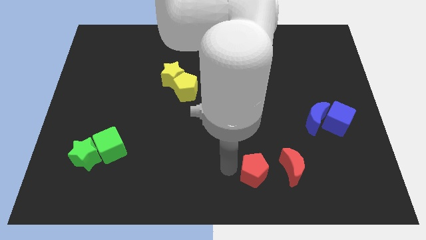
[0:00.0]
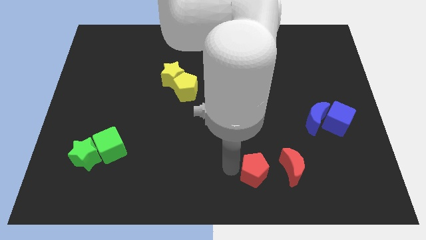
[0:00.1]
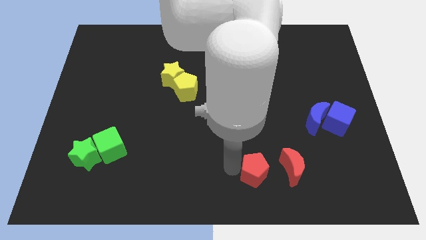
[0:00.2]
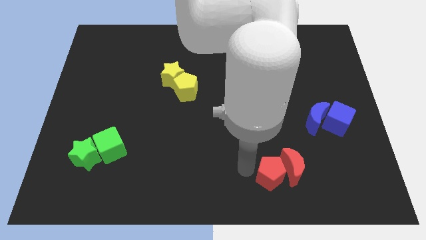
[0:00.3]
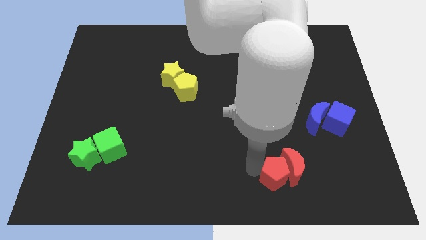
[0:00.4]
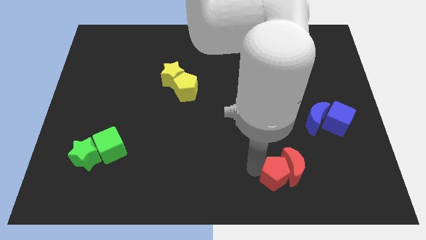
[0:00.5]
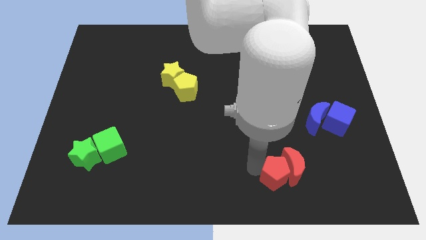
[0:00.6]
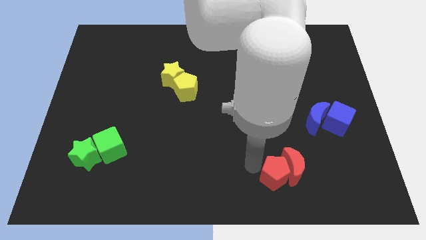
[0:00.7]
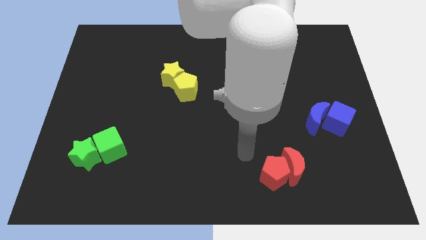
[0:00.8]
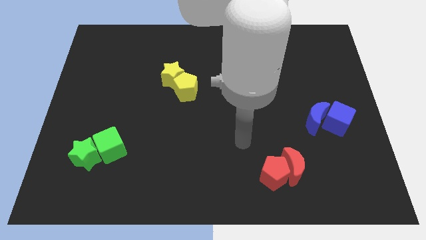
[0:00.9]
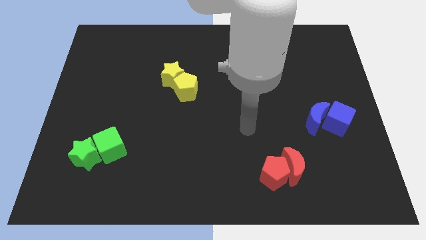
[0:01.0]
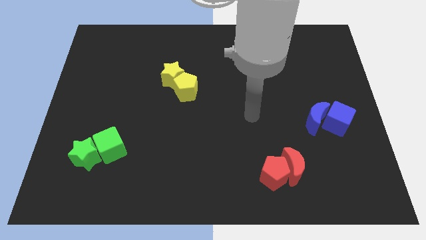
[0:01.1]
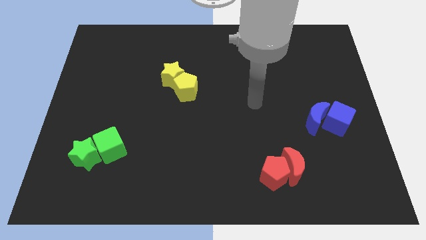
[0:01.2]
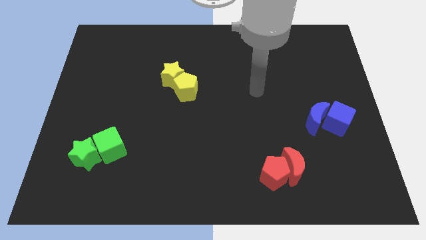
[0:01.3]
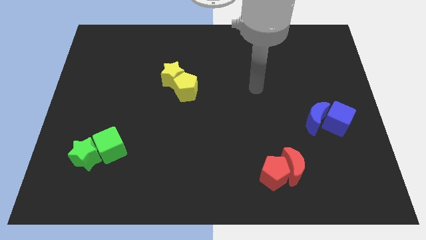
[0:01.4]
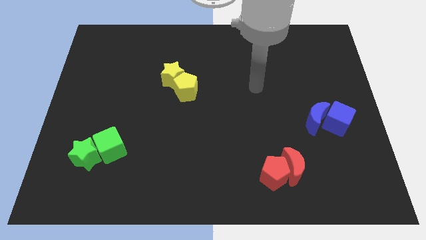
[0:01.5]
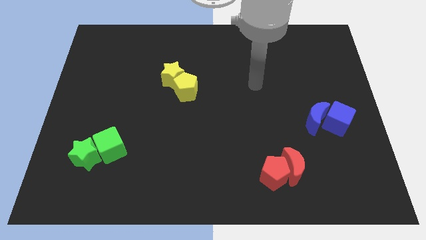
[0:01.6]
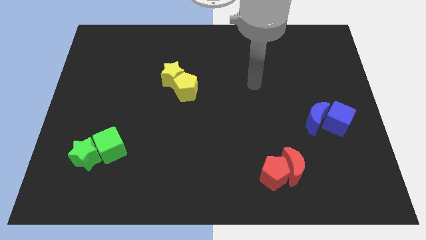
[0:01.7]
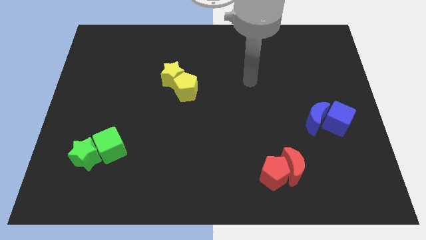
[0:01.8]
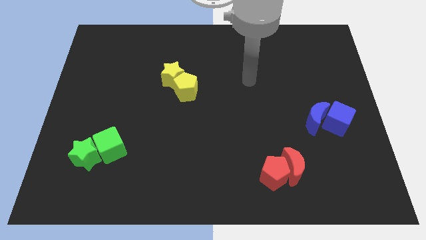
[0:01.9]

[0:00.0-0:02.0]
move the red pentagon into the red crescent

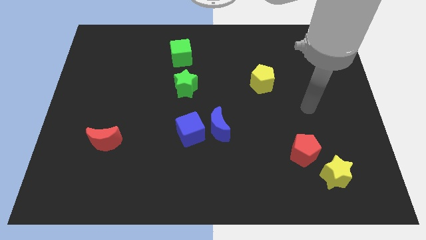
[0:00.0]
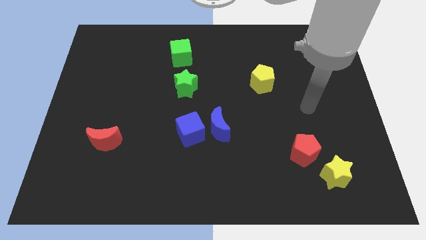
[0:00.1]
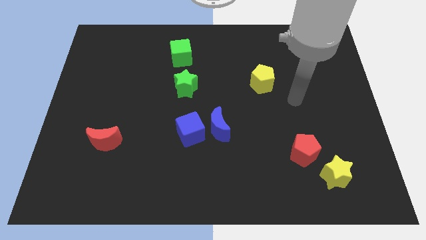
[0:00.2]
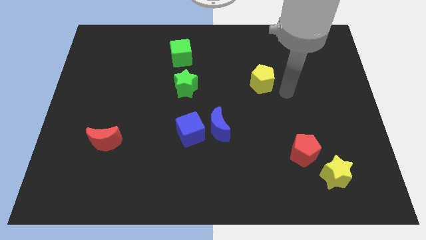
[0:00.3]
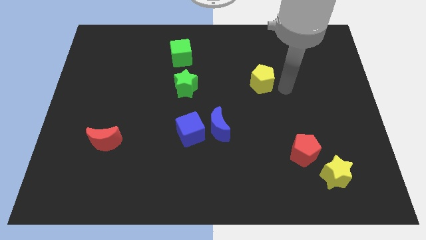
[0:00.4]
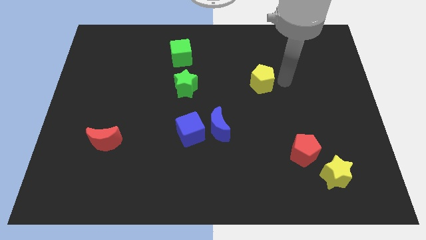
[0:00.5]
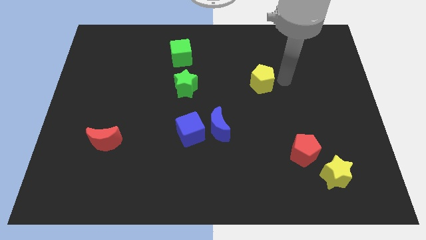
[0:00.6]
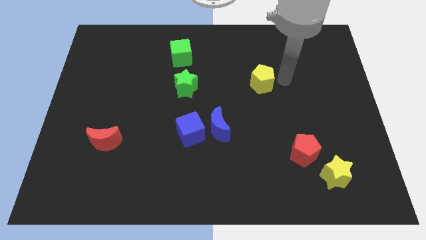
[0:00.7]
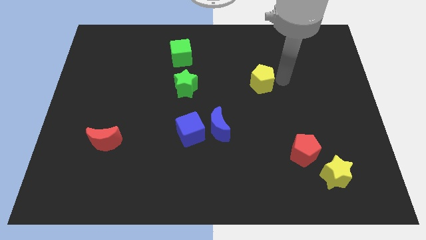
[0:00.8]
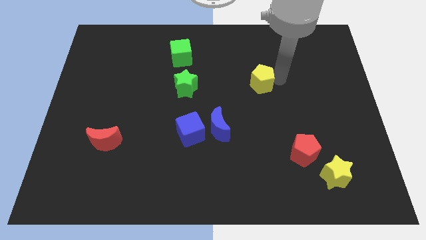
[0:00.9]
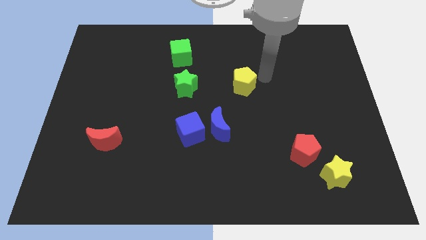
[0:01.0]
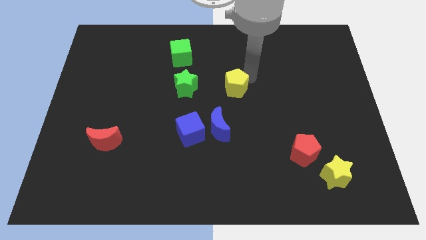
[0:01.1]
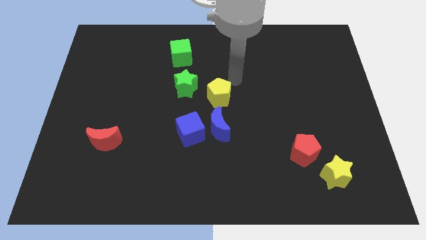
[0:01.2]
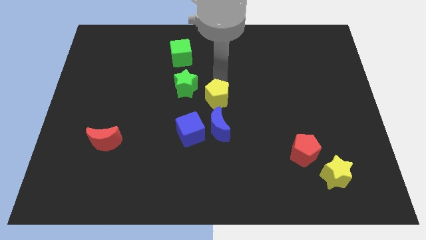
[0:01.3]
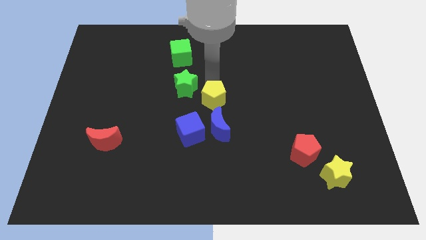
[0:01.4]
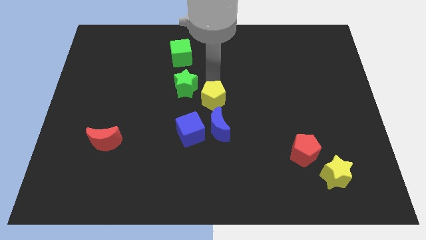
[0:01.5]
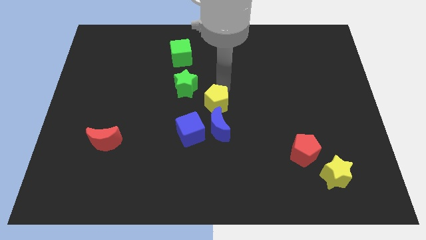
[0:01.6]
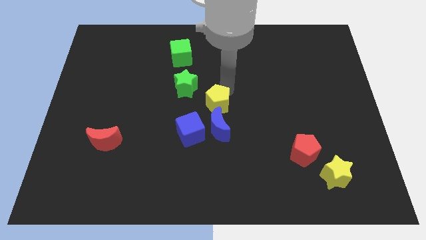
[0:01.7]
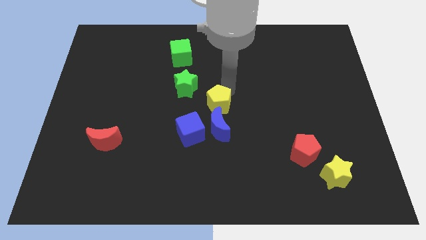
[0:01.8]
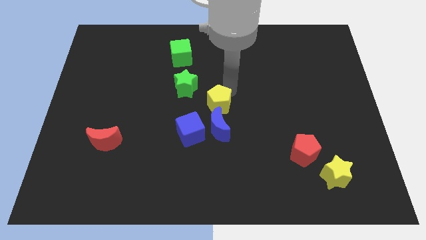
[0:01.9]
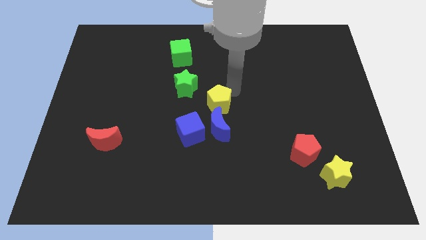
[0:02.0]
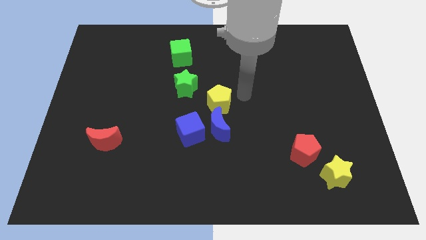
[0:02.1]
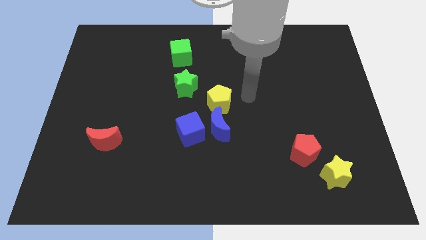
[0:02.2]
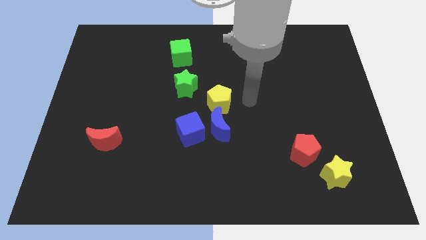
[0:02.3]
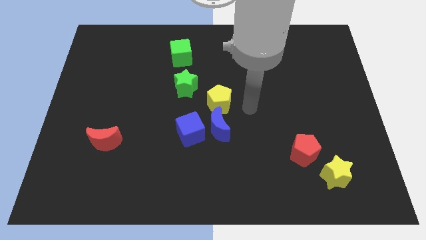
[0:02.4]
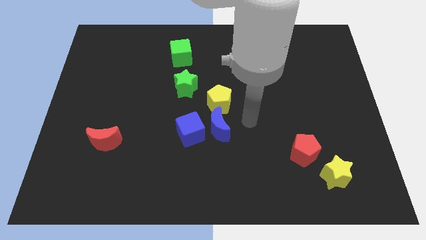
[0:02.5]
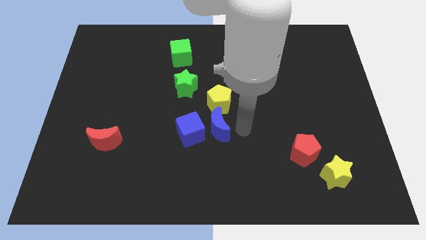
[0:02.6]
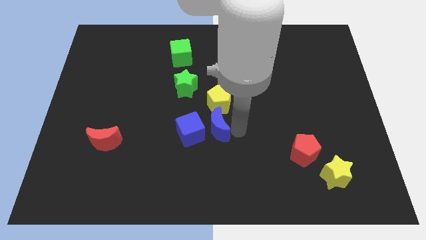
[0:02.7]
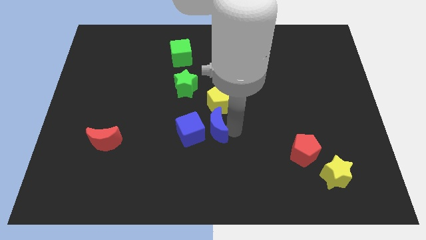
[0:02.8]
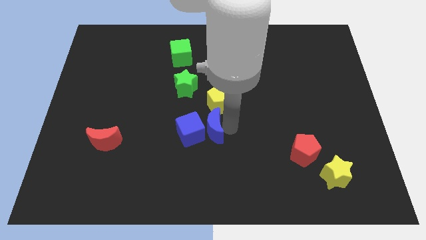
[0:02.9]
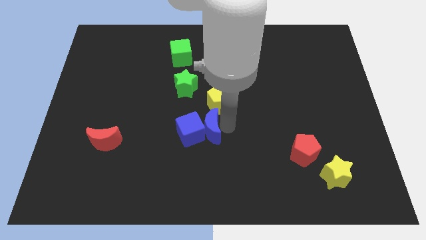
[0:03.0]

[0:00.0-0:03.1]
put the yellow pentagon and the blue crescent in a line vertically

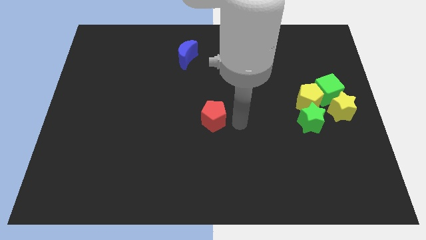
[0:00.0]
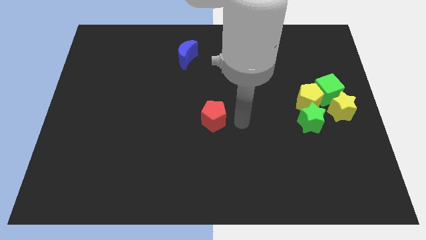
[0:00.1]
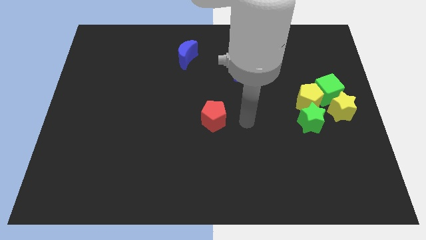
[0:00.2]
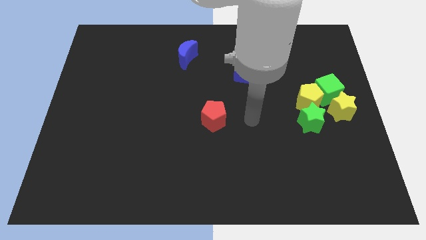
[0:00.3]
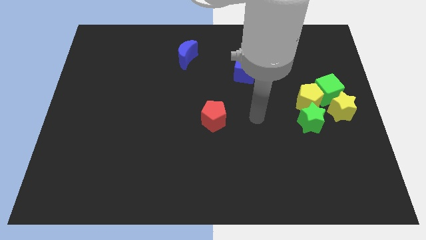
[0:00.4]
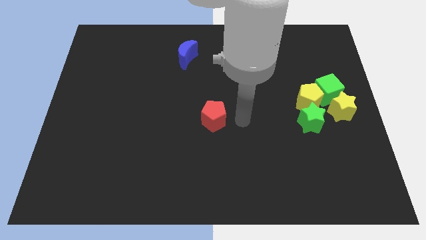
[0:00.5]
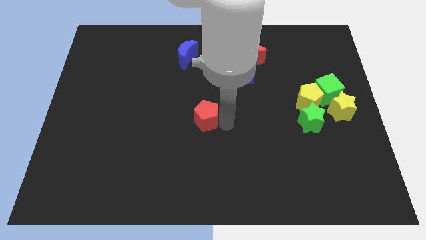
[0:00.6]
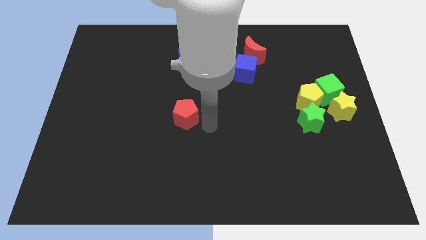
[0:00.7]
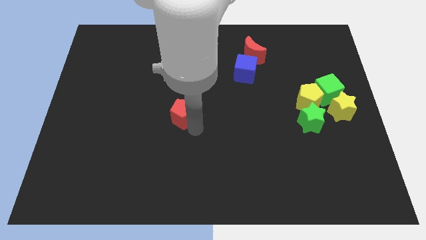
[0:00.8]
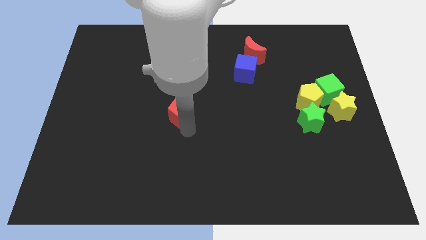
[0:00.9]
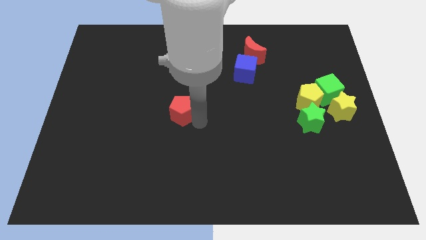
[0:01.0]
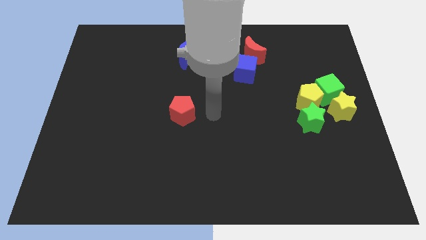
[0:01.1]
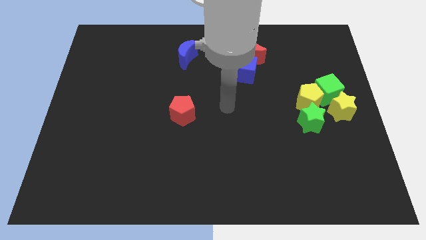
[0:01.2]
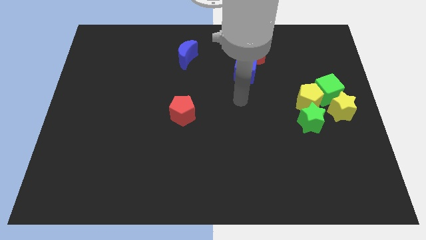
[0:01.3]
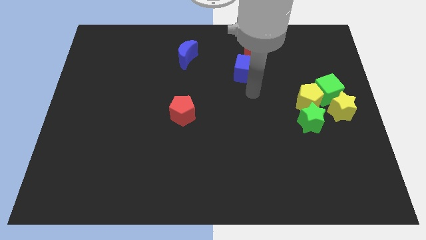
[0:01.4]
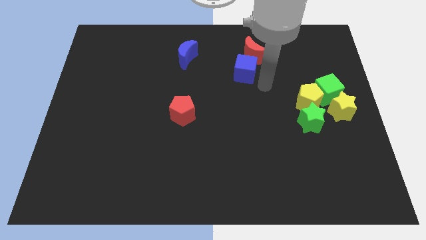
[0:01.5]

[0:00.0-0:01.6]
move the red pentagon vertically to the bottom side of the blue crescent

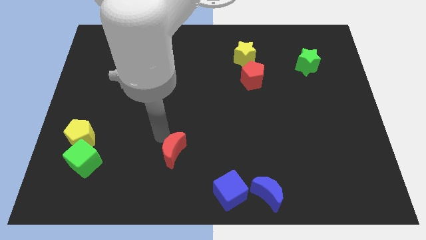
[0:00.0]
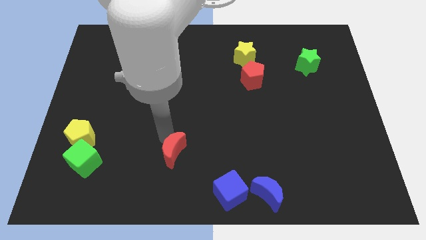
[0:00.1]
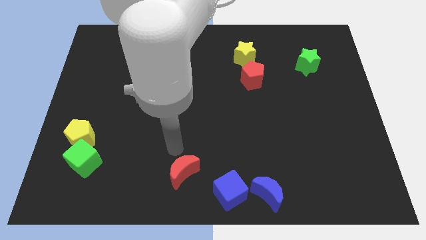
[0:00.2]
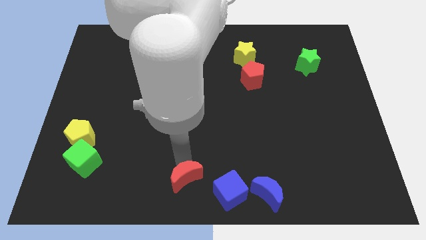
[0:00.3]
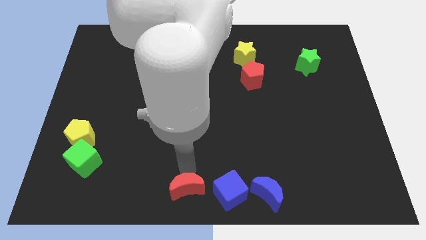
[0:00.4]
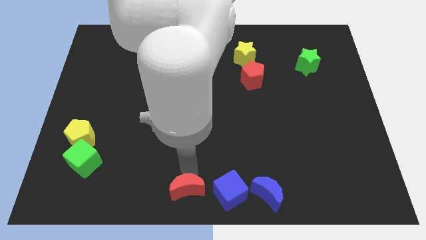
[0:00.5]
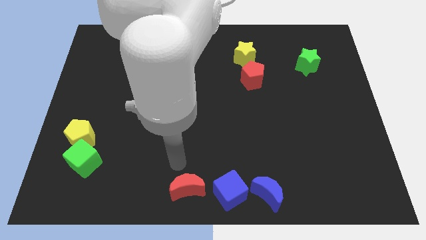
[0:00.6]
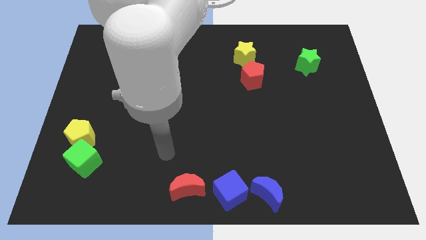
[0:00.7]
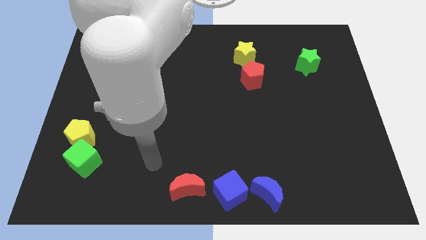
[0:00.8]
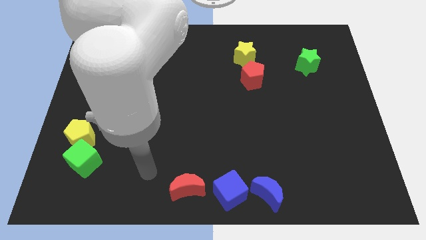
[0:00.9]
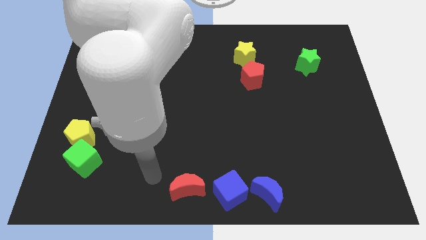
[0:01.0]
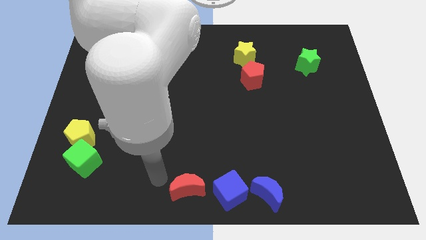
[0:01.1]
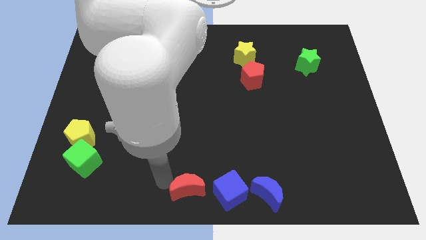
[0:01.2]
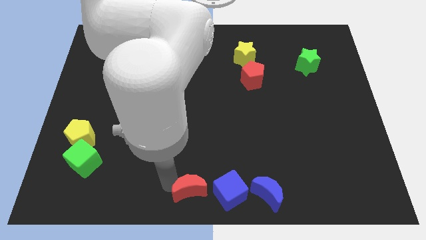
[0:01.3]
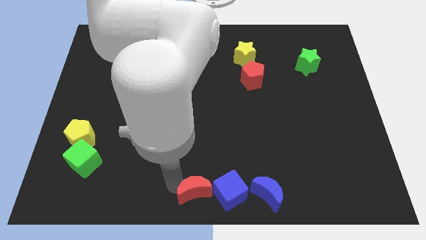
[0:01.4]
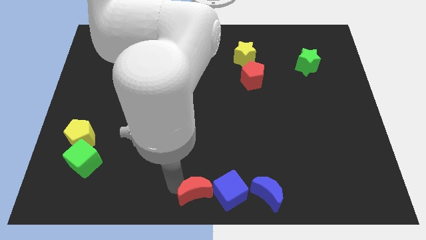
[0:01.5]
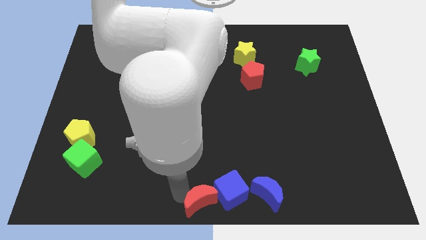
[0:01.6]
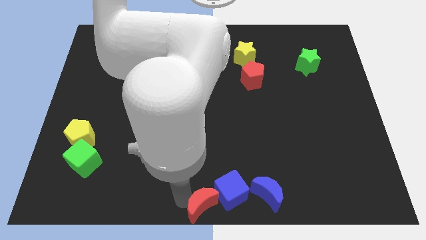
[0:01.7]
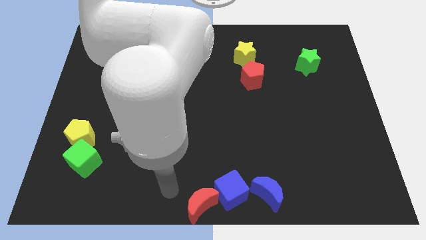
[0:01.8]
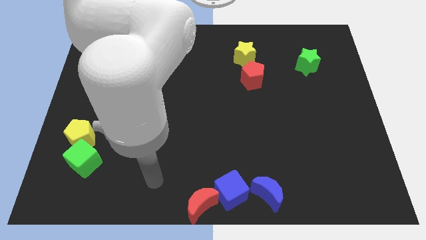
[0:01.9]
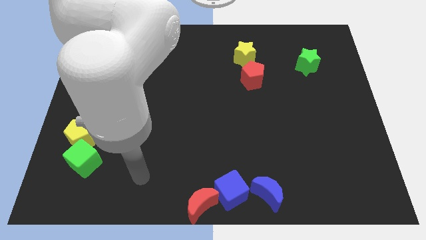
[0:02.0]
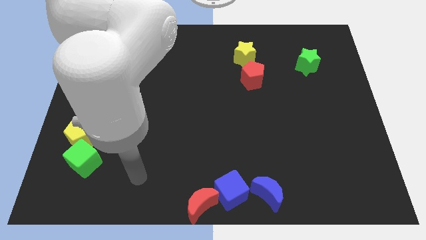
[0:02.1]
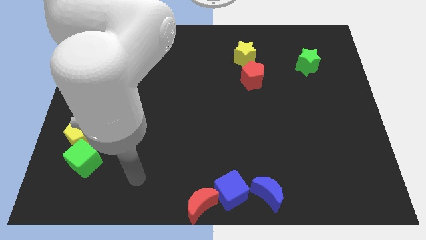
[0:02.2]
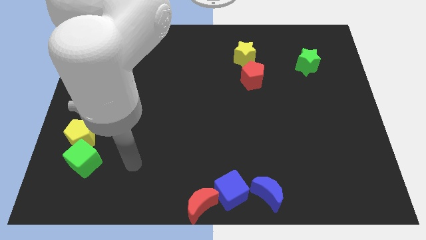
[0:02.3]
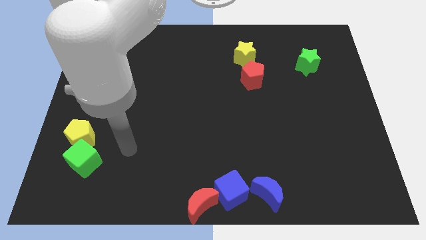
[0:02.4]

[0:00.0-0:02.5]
place the red crescent beside the blue cube
